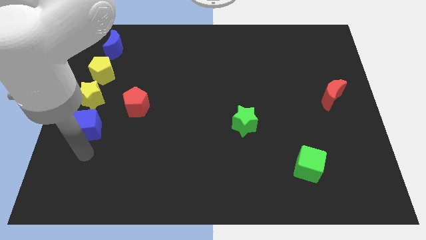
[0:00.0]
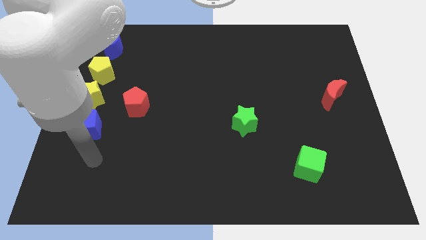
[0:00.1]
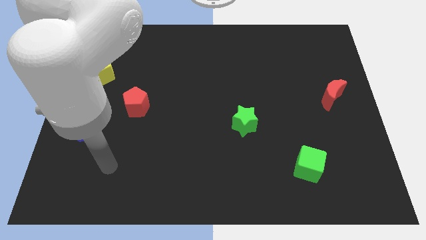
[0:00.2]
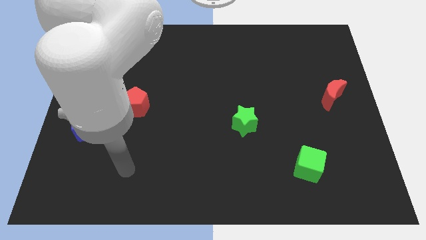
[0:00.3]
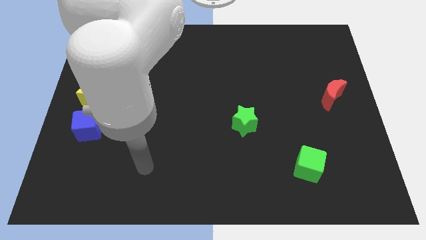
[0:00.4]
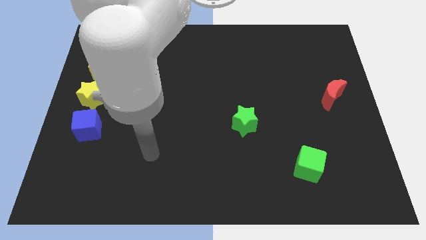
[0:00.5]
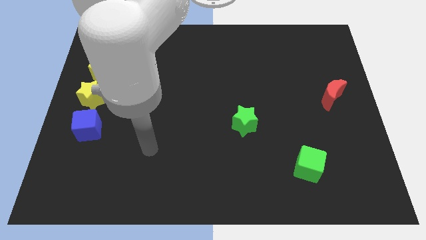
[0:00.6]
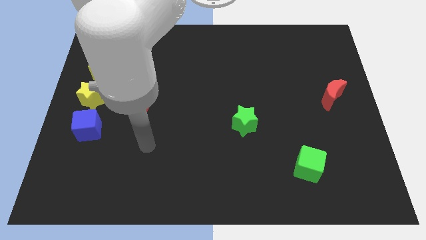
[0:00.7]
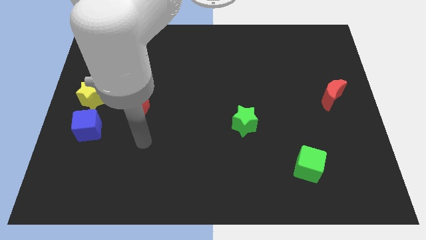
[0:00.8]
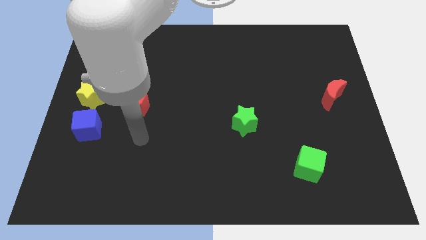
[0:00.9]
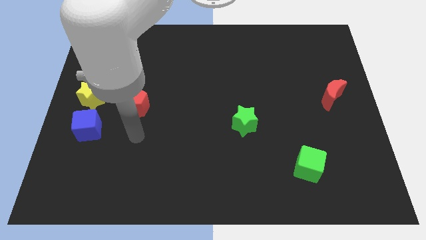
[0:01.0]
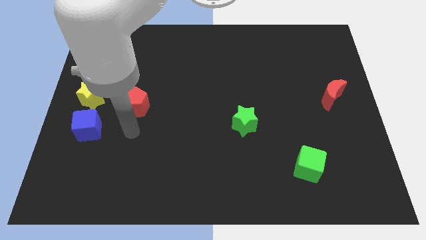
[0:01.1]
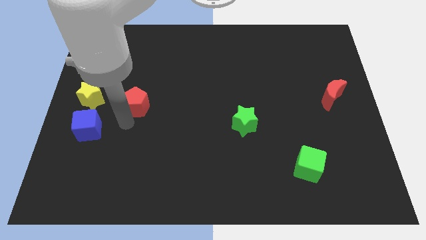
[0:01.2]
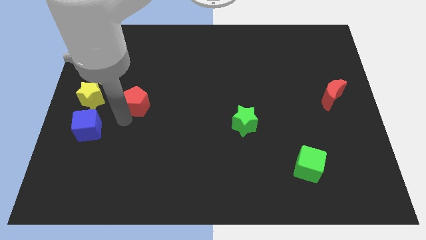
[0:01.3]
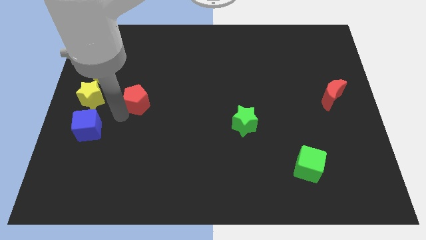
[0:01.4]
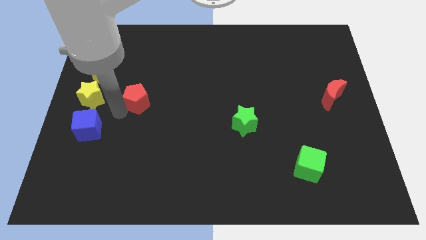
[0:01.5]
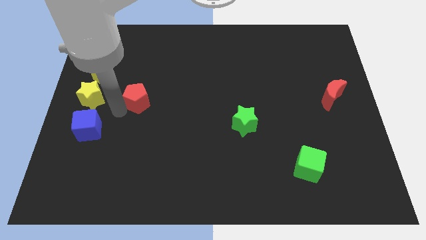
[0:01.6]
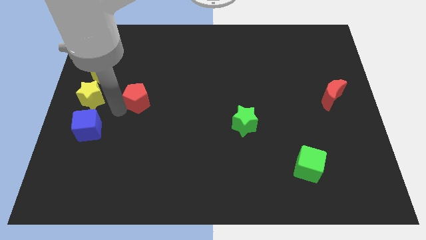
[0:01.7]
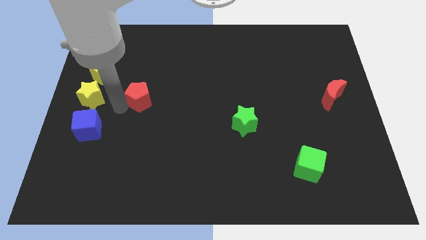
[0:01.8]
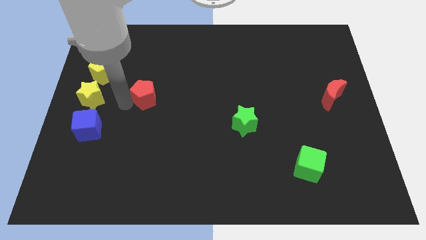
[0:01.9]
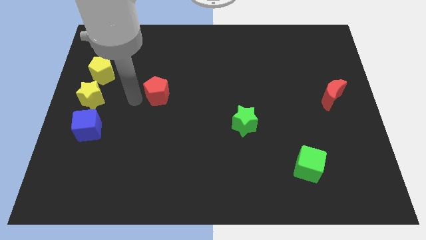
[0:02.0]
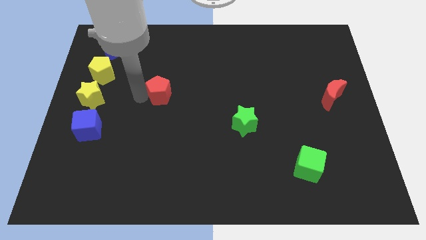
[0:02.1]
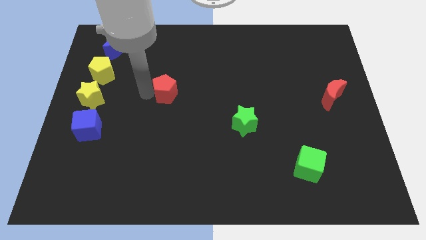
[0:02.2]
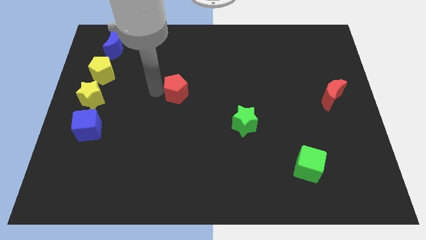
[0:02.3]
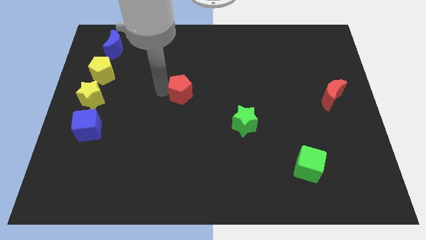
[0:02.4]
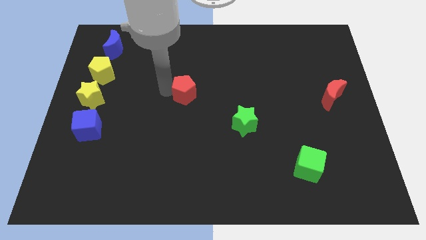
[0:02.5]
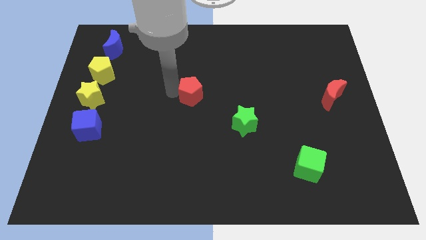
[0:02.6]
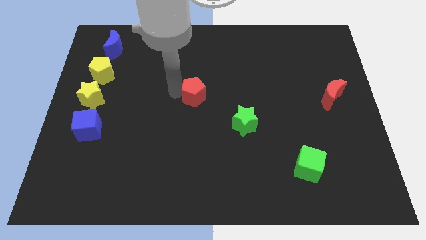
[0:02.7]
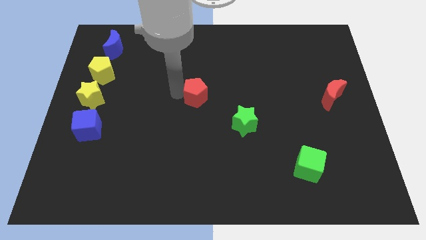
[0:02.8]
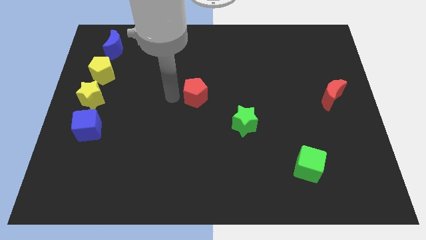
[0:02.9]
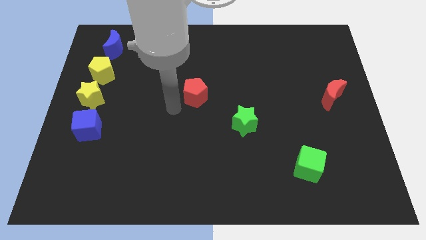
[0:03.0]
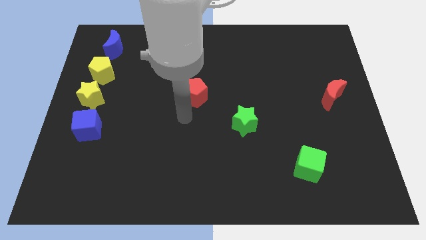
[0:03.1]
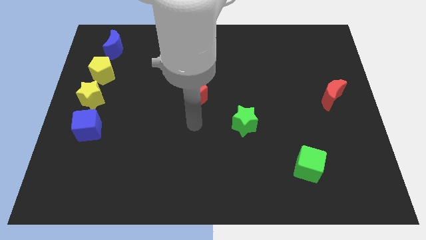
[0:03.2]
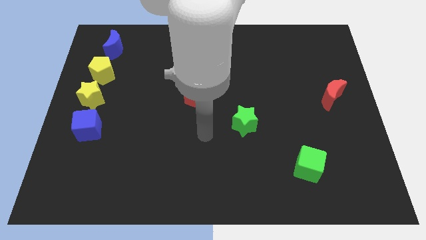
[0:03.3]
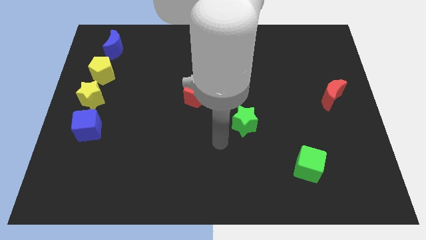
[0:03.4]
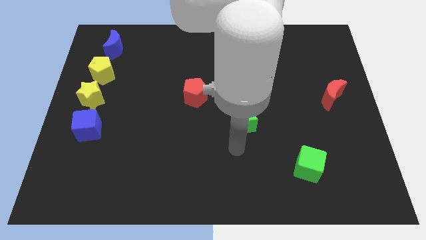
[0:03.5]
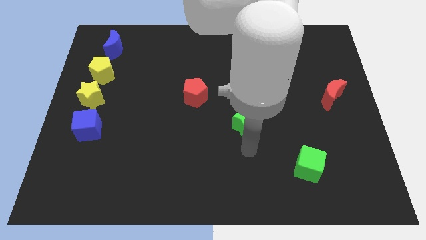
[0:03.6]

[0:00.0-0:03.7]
move the red pentagon towards the right

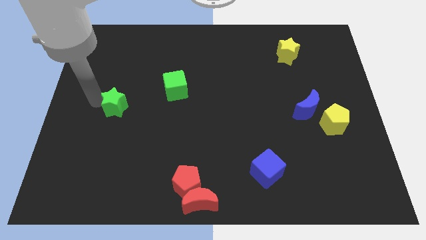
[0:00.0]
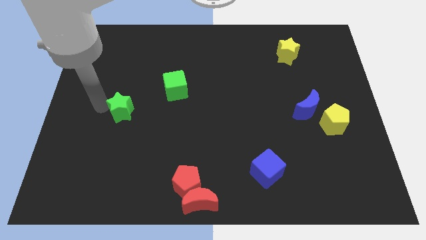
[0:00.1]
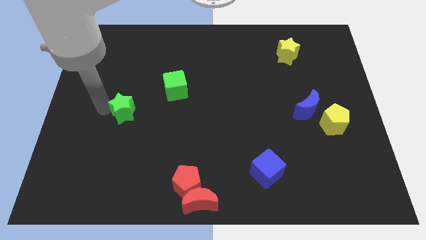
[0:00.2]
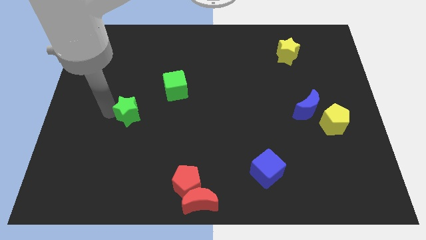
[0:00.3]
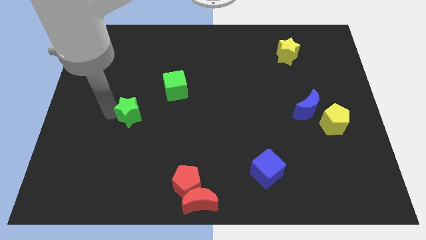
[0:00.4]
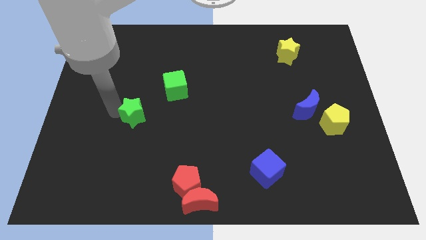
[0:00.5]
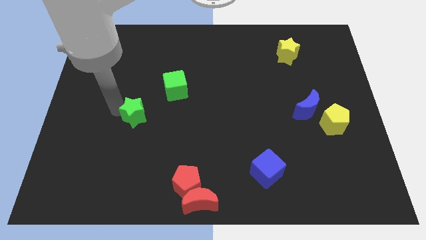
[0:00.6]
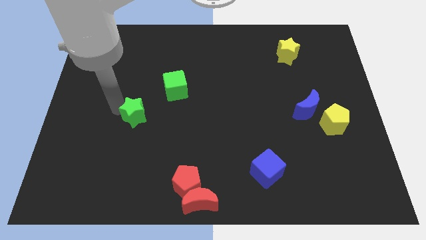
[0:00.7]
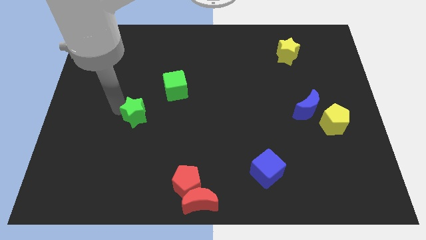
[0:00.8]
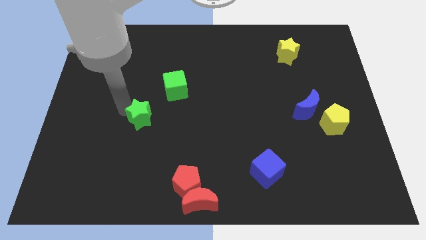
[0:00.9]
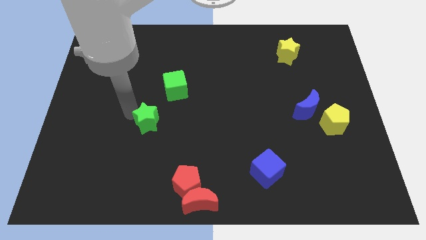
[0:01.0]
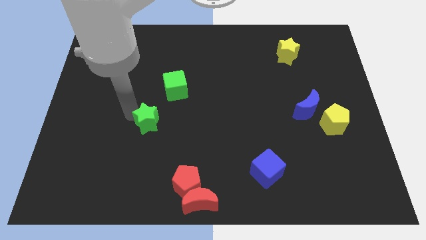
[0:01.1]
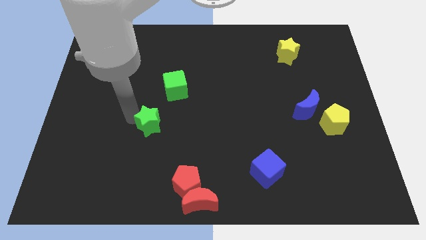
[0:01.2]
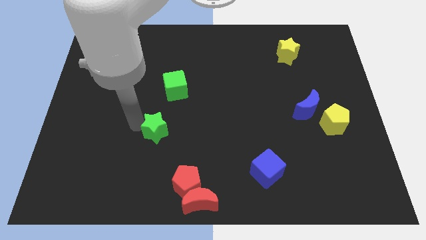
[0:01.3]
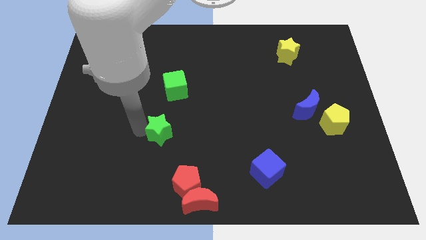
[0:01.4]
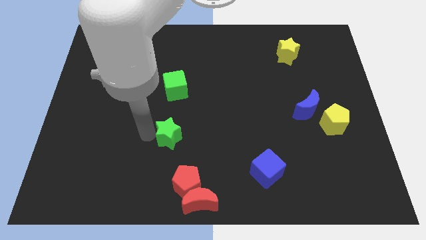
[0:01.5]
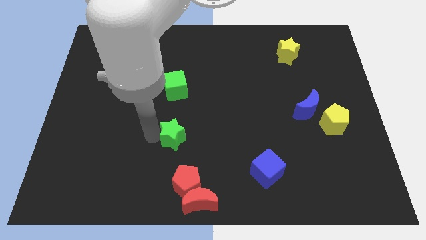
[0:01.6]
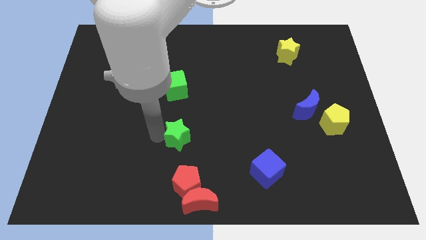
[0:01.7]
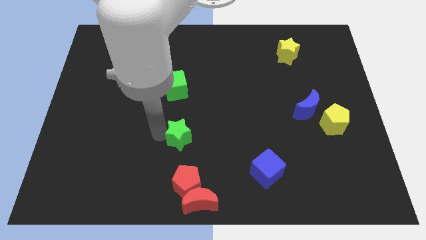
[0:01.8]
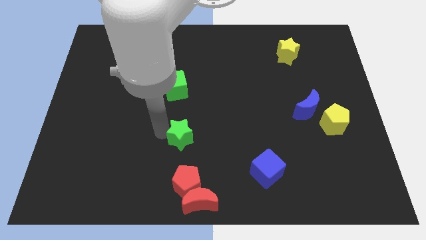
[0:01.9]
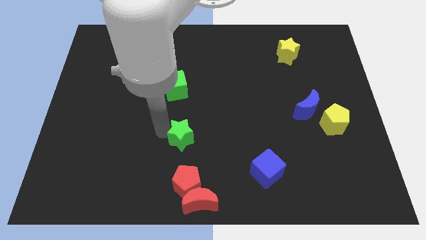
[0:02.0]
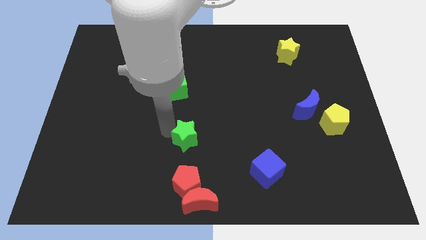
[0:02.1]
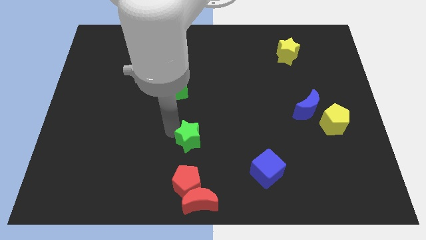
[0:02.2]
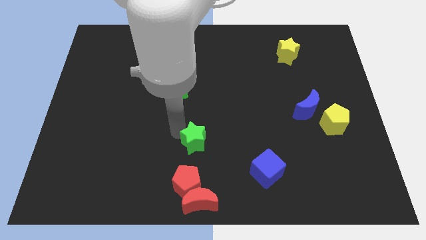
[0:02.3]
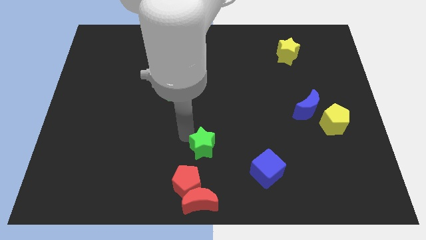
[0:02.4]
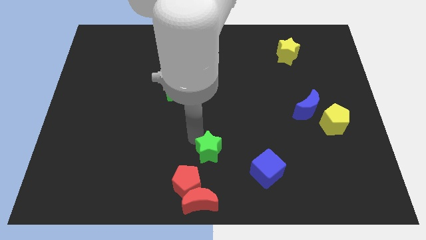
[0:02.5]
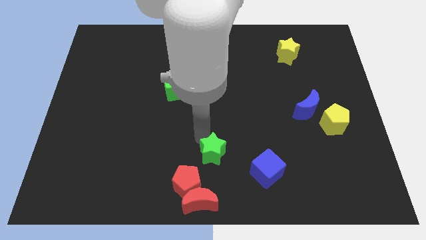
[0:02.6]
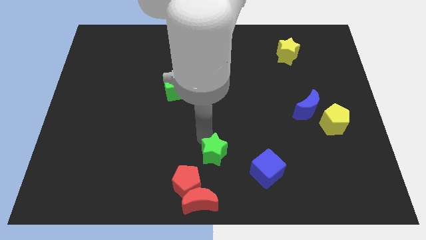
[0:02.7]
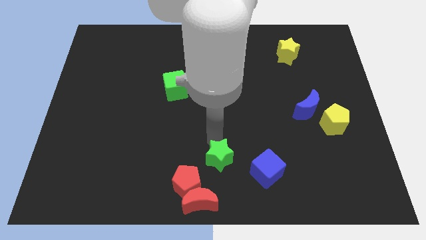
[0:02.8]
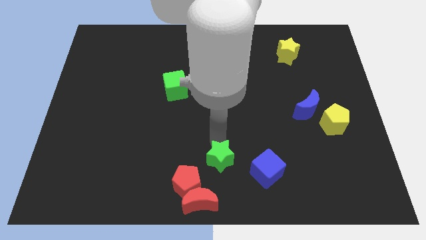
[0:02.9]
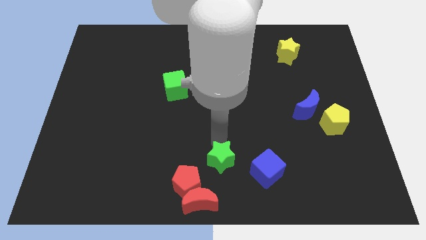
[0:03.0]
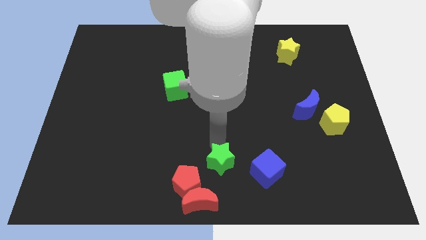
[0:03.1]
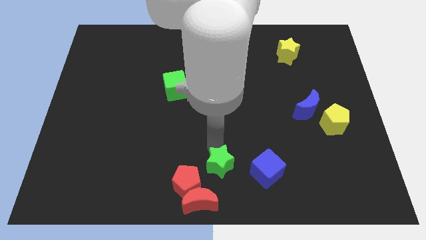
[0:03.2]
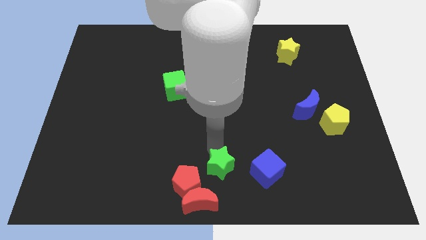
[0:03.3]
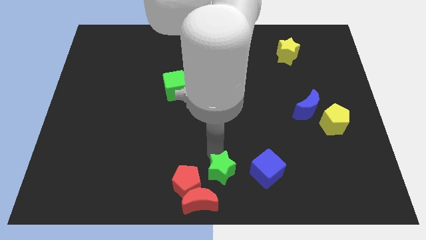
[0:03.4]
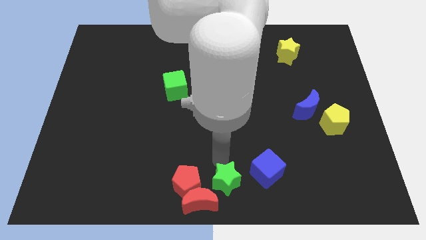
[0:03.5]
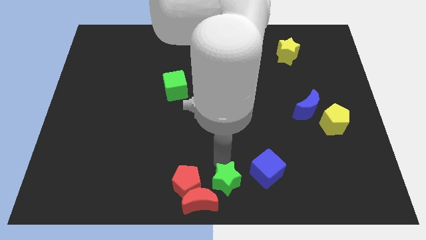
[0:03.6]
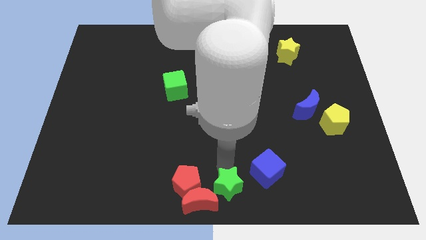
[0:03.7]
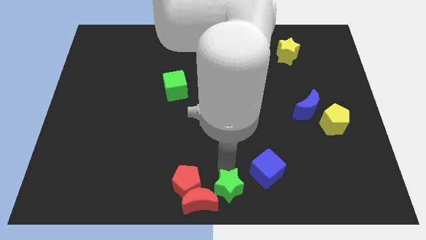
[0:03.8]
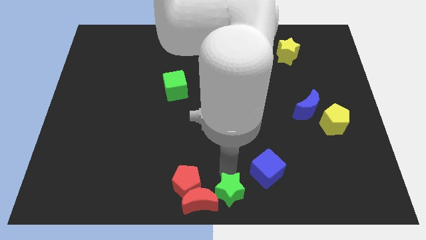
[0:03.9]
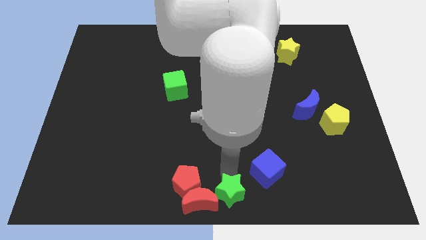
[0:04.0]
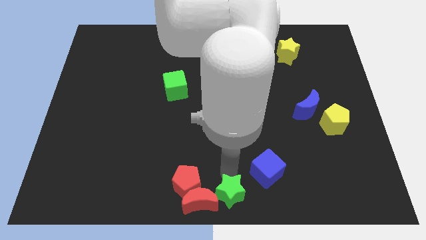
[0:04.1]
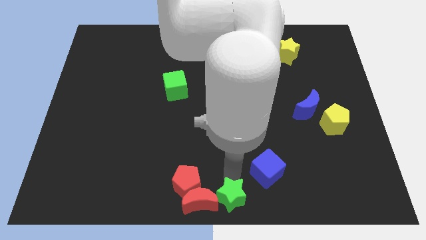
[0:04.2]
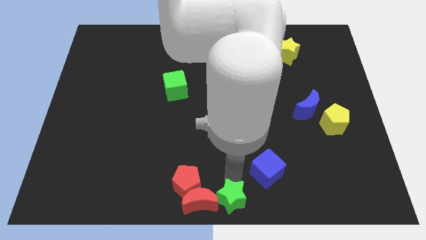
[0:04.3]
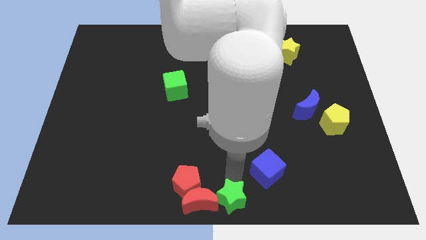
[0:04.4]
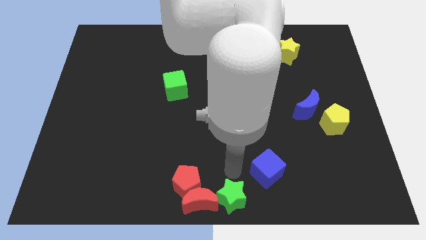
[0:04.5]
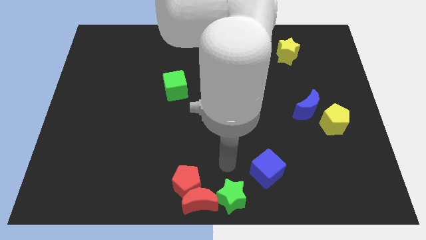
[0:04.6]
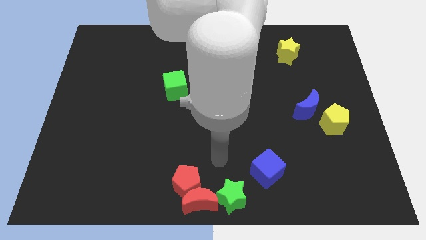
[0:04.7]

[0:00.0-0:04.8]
push green star to bottom center of the board

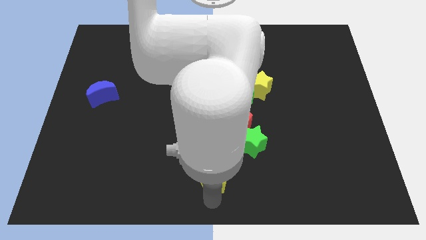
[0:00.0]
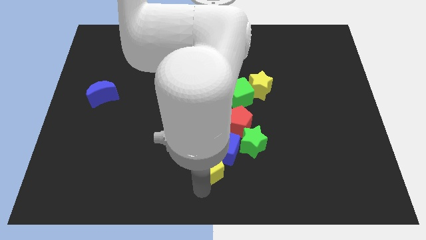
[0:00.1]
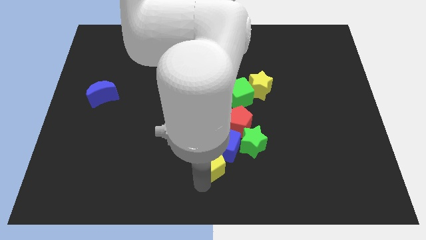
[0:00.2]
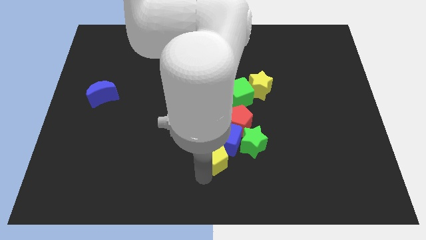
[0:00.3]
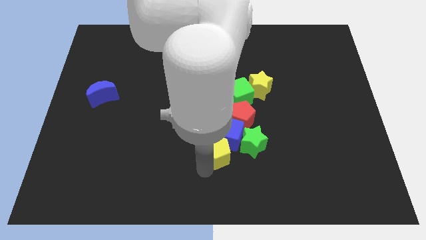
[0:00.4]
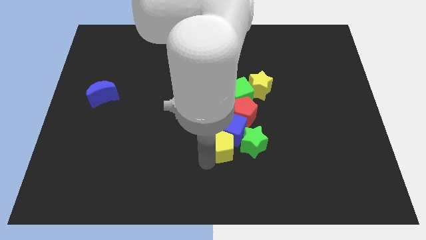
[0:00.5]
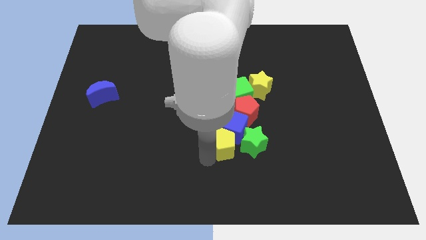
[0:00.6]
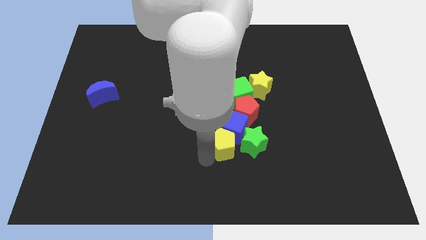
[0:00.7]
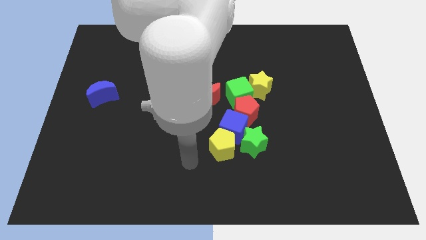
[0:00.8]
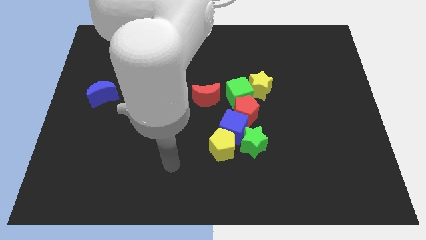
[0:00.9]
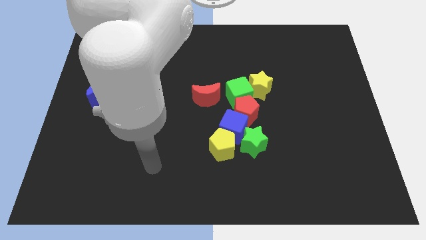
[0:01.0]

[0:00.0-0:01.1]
push yellow pentagon slightly towards upwards
